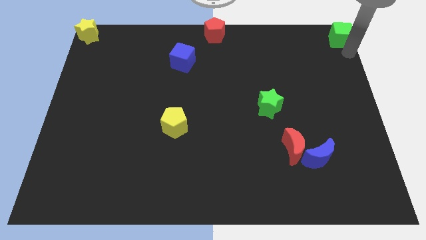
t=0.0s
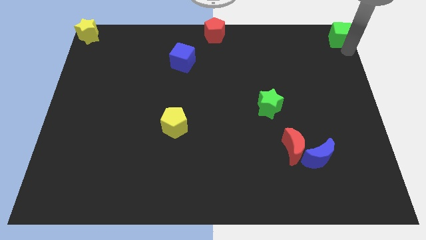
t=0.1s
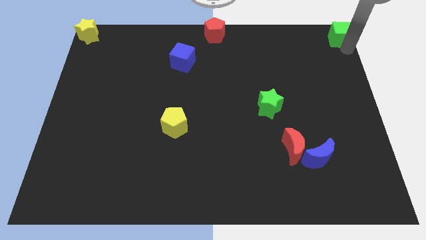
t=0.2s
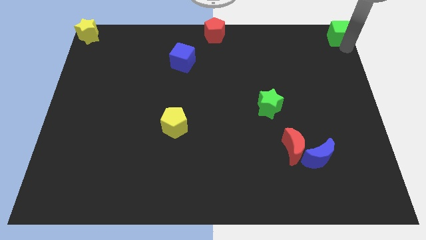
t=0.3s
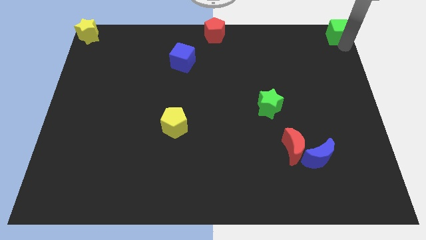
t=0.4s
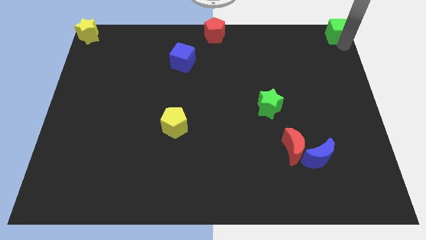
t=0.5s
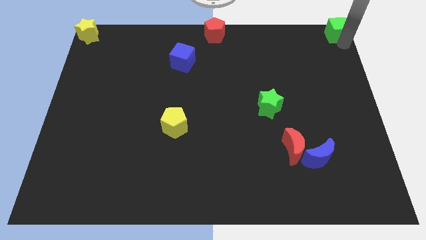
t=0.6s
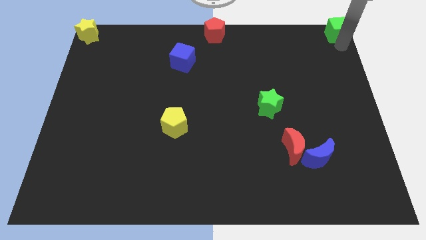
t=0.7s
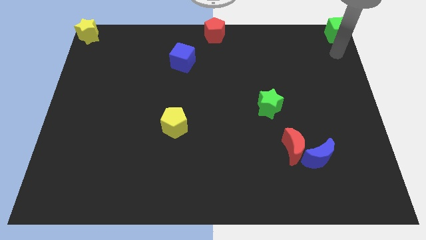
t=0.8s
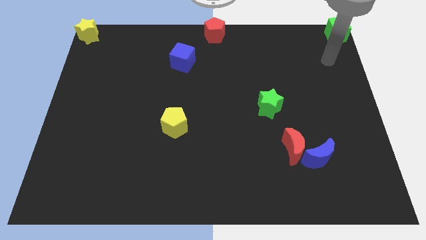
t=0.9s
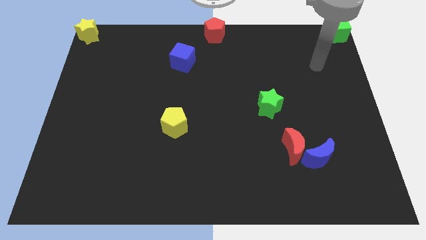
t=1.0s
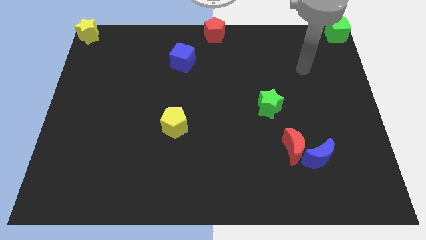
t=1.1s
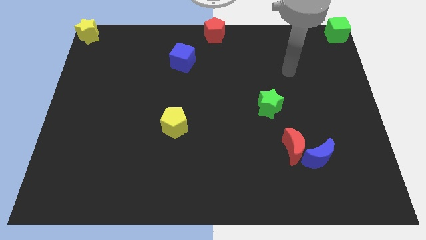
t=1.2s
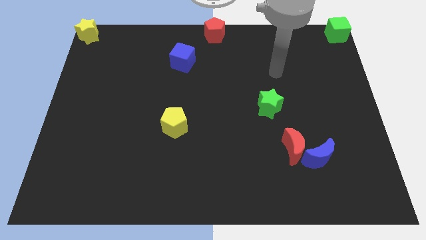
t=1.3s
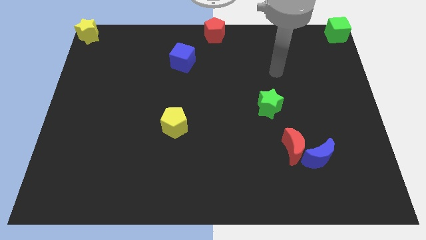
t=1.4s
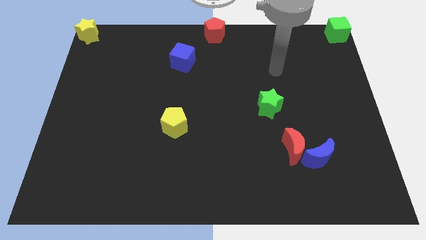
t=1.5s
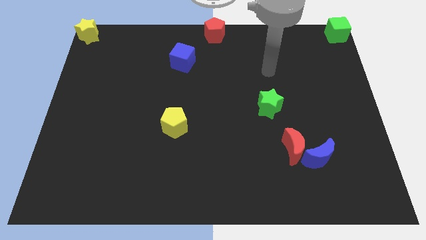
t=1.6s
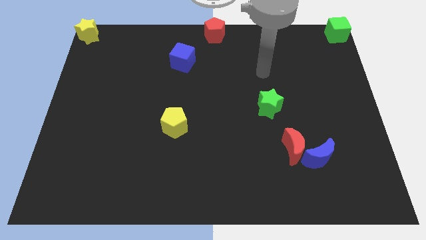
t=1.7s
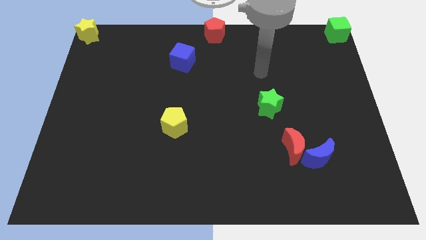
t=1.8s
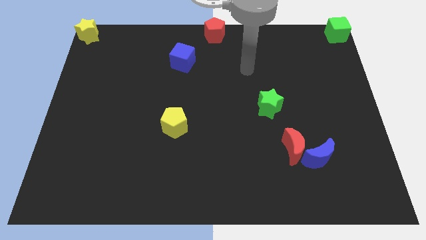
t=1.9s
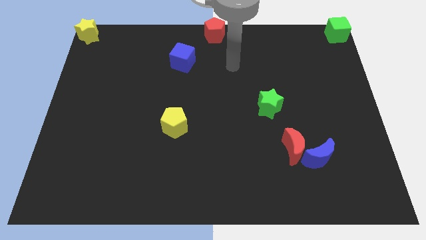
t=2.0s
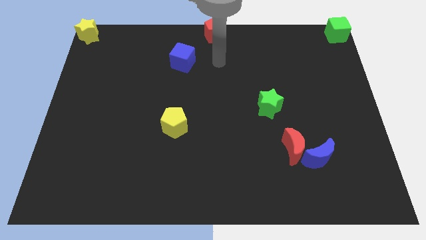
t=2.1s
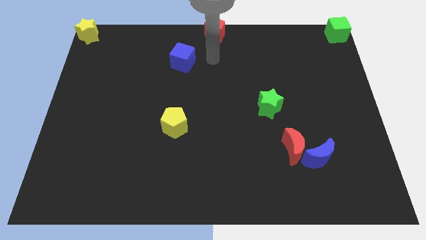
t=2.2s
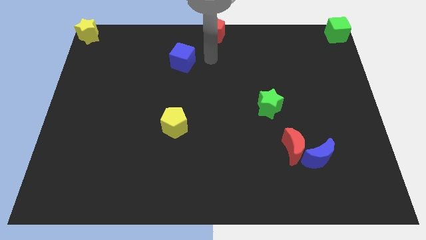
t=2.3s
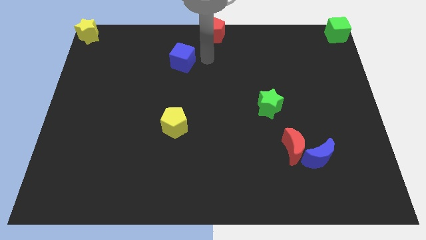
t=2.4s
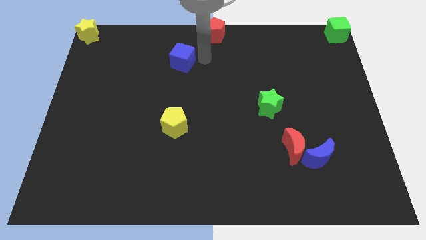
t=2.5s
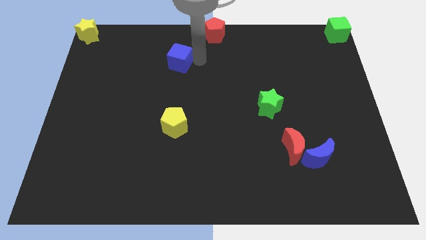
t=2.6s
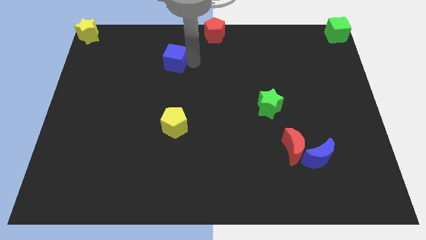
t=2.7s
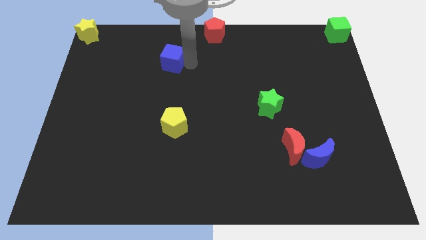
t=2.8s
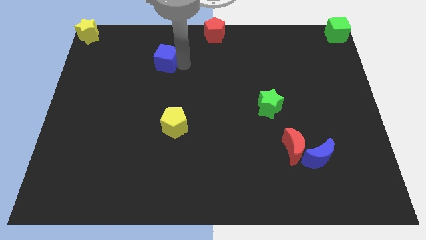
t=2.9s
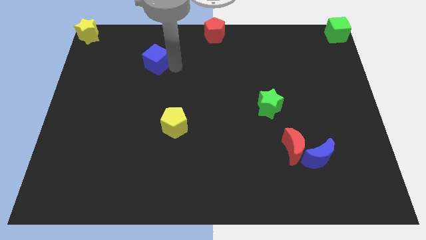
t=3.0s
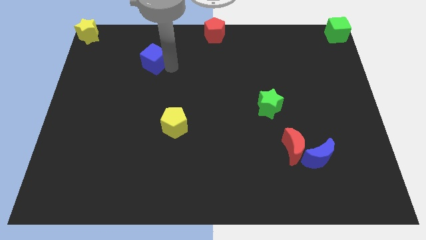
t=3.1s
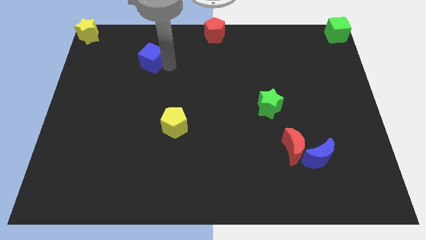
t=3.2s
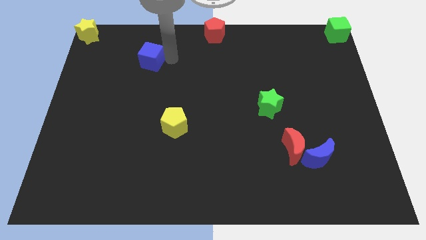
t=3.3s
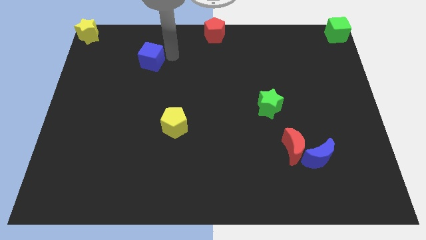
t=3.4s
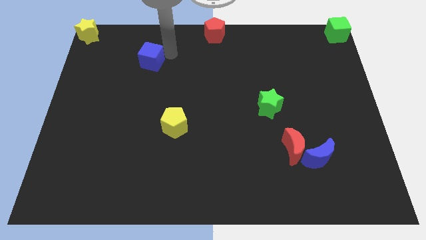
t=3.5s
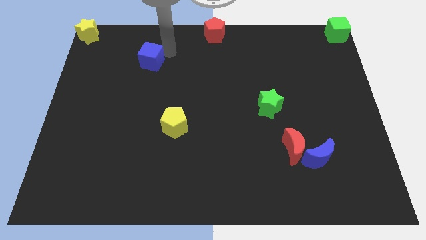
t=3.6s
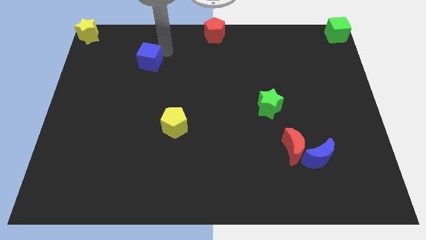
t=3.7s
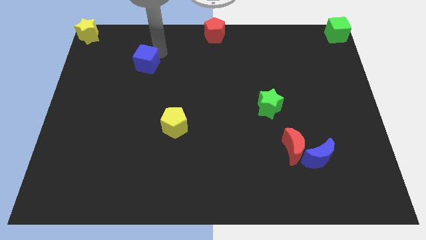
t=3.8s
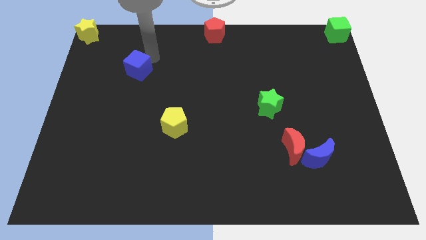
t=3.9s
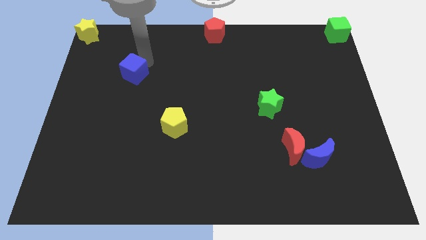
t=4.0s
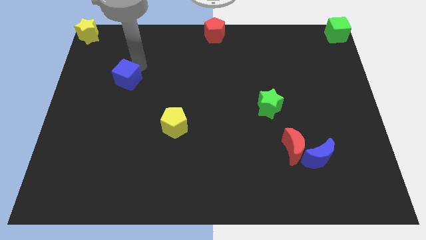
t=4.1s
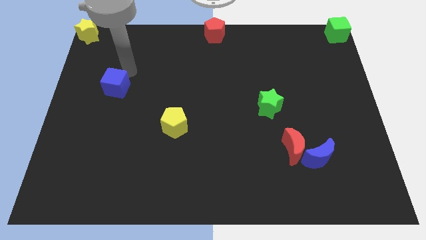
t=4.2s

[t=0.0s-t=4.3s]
place blue cube in between two blocks

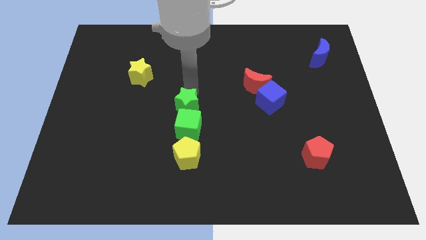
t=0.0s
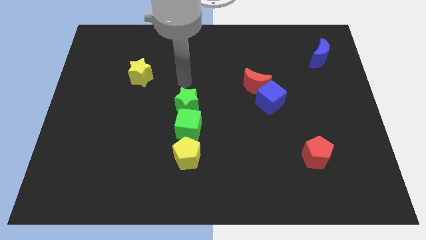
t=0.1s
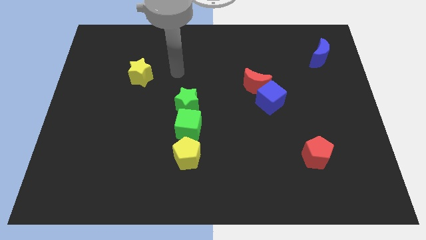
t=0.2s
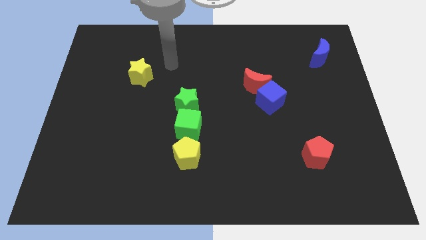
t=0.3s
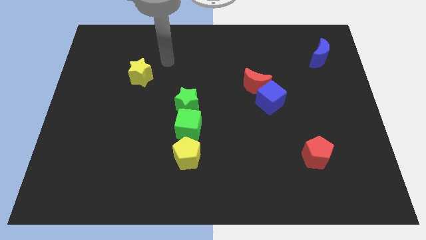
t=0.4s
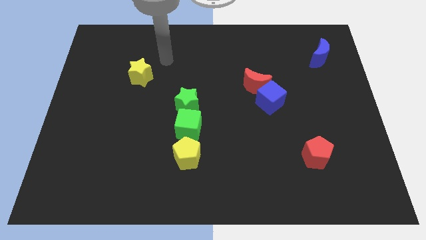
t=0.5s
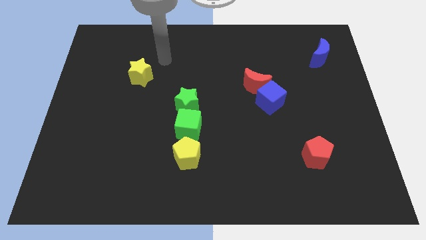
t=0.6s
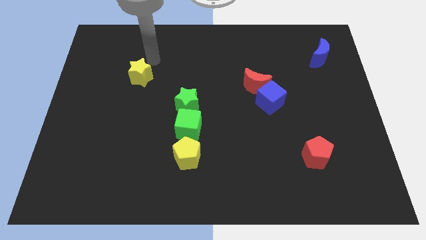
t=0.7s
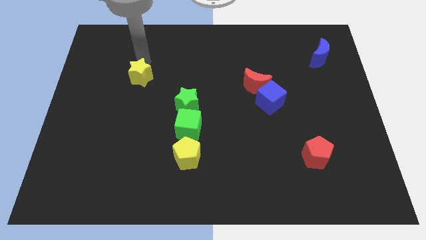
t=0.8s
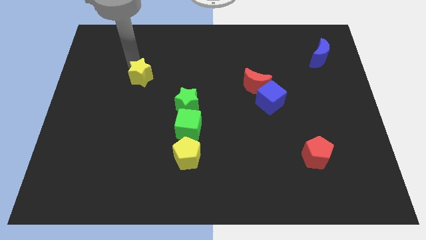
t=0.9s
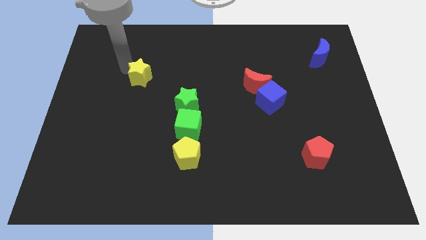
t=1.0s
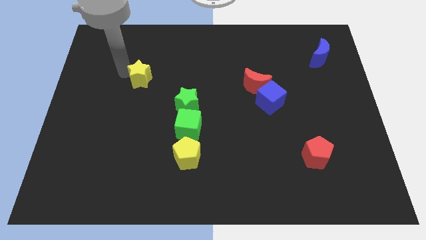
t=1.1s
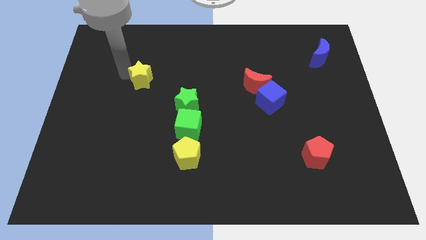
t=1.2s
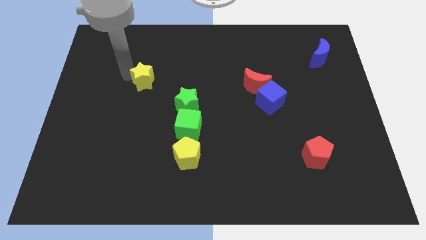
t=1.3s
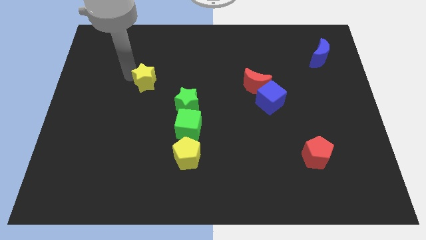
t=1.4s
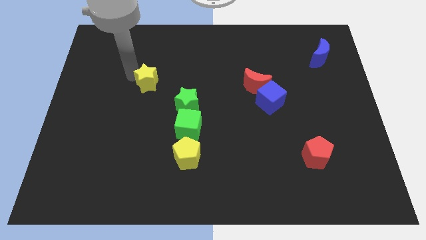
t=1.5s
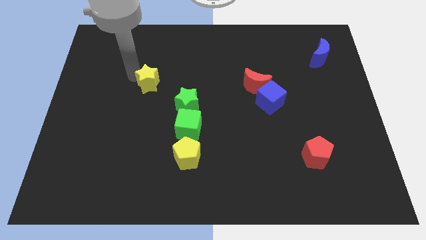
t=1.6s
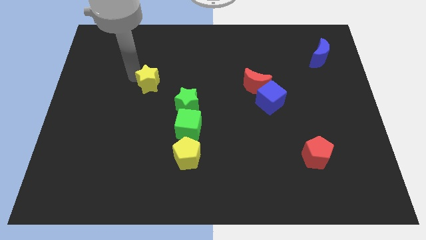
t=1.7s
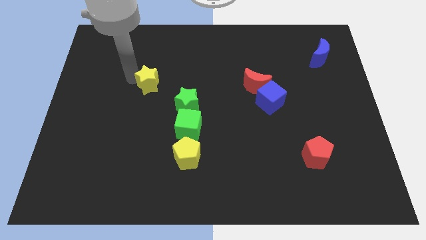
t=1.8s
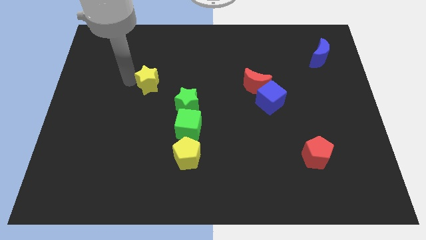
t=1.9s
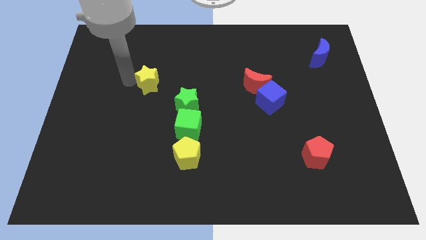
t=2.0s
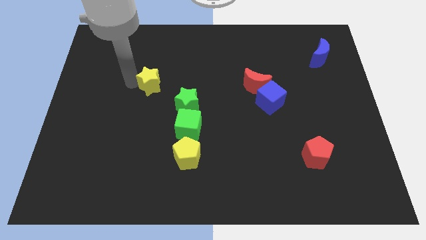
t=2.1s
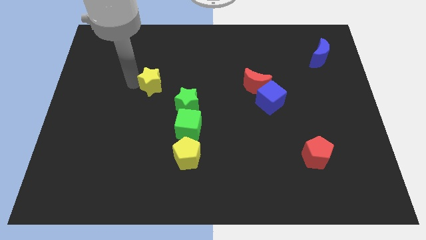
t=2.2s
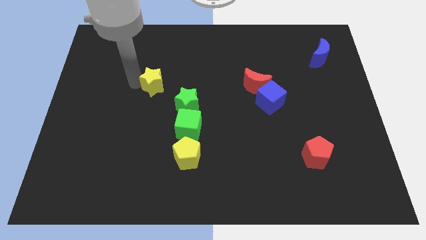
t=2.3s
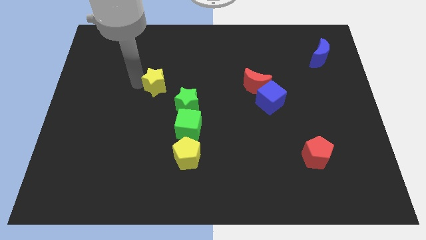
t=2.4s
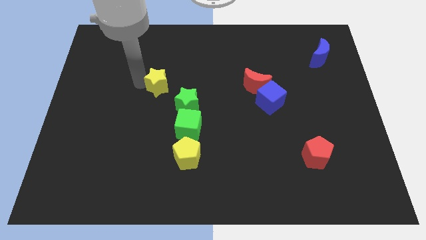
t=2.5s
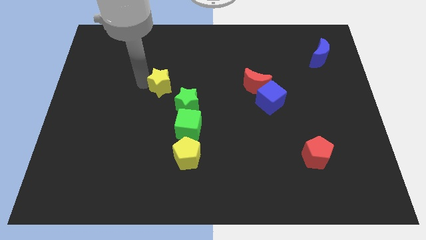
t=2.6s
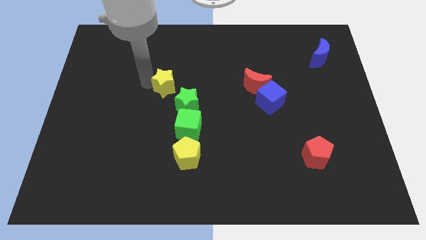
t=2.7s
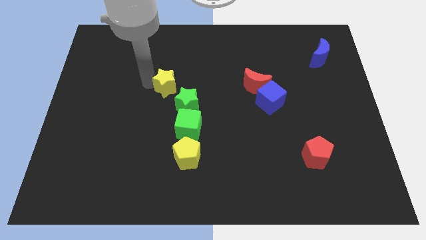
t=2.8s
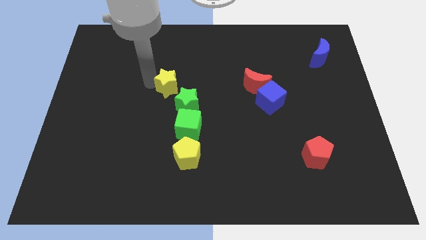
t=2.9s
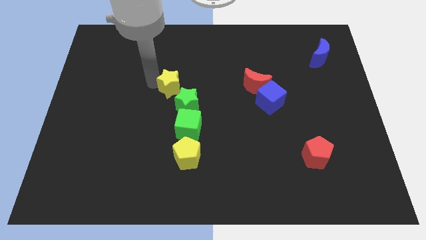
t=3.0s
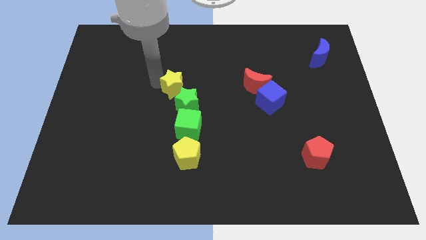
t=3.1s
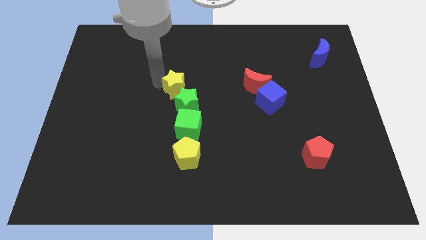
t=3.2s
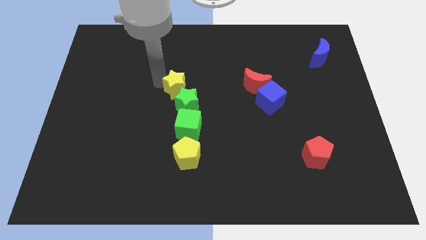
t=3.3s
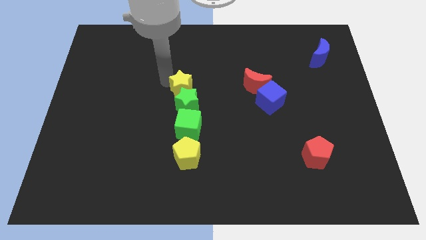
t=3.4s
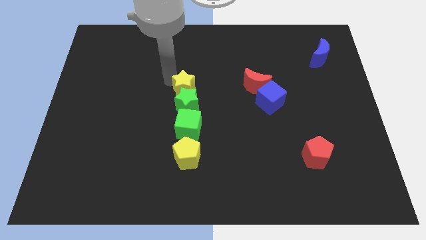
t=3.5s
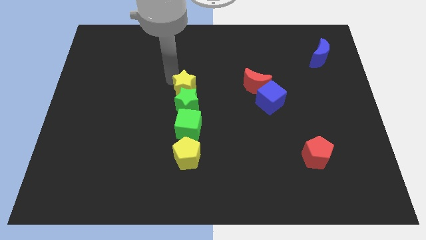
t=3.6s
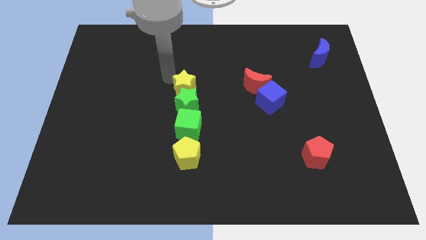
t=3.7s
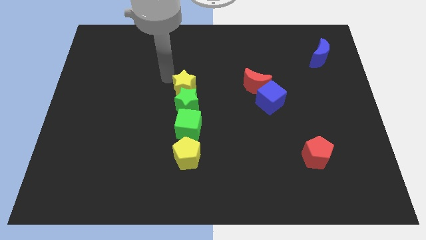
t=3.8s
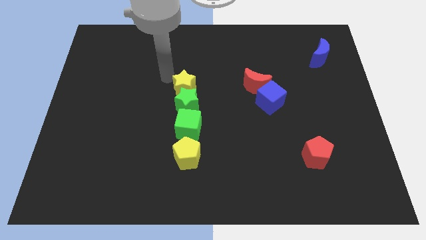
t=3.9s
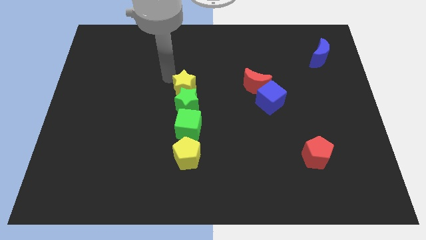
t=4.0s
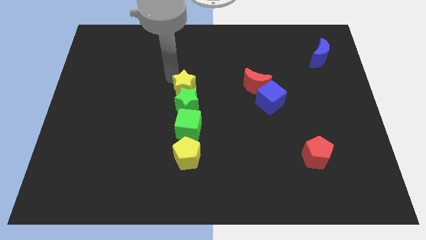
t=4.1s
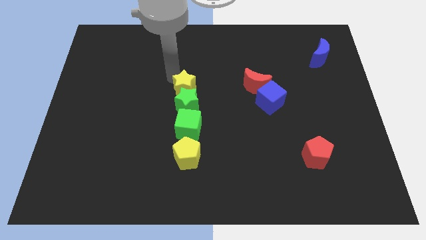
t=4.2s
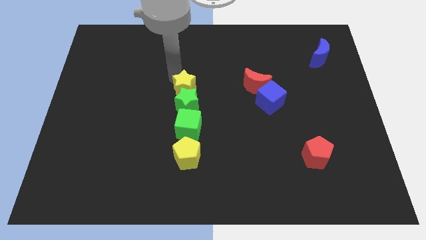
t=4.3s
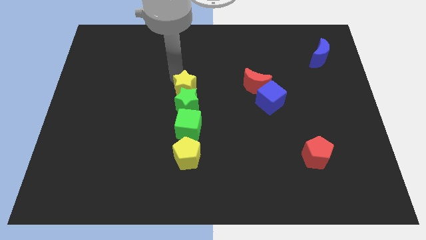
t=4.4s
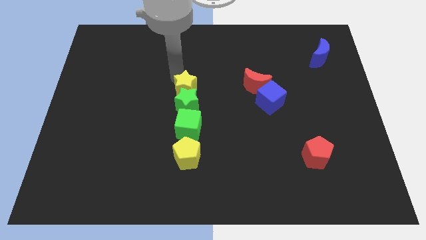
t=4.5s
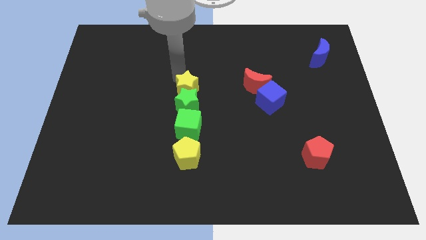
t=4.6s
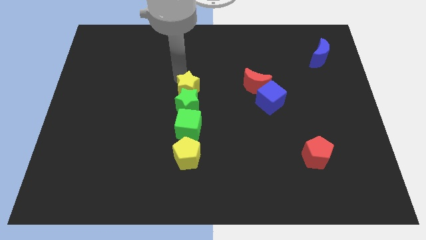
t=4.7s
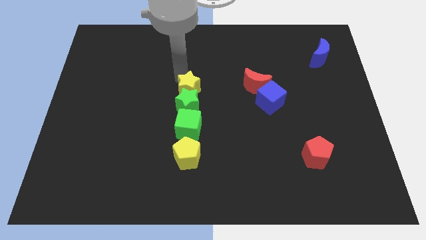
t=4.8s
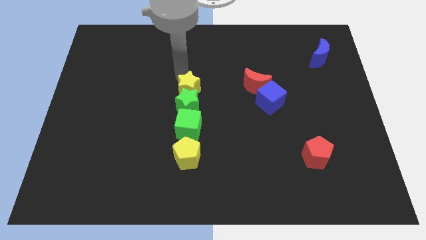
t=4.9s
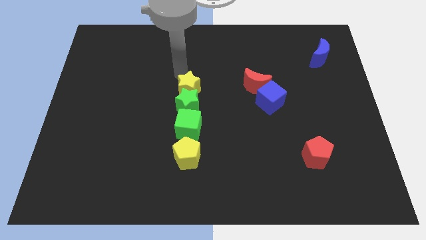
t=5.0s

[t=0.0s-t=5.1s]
push the yellow star at the top side of the vertical line of blocks
